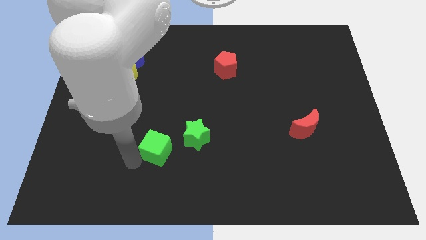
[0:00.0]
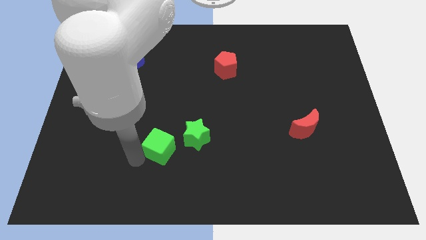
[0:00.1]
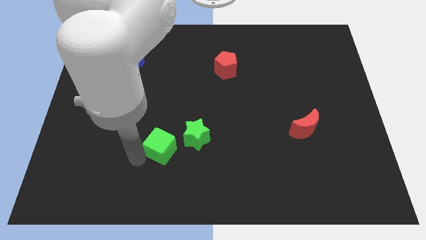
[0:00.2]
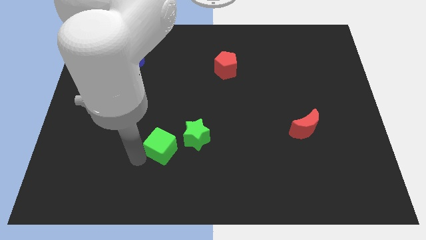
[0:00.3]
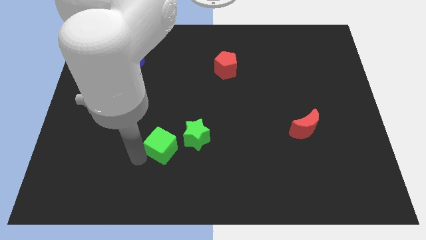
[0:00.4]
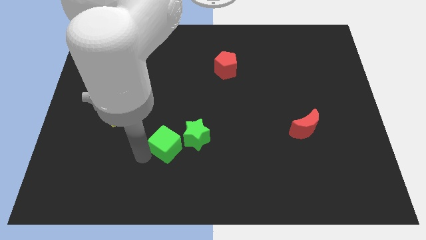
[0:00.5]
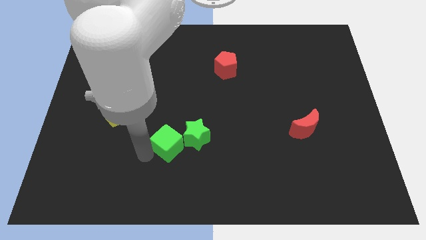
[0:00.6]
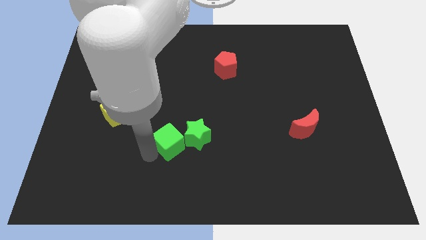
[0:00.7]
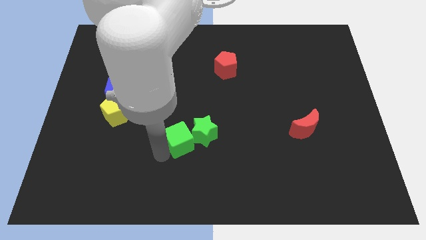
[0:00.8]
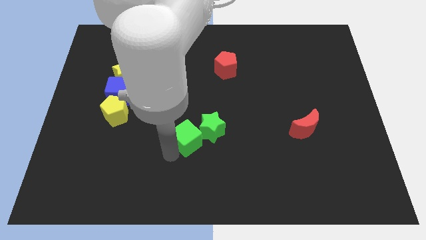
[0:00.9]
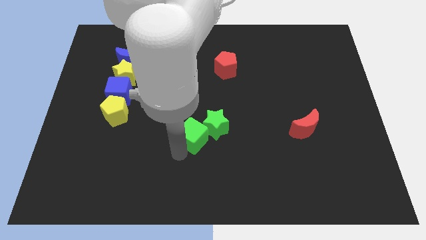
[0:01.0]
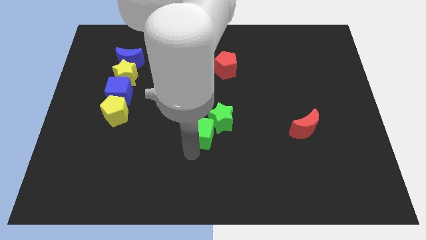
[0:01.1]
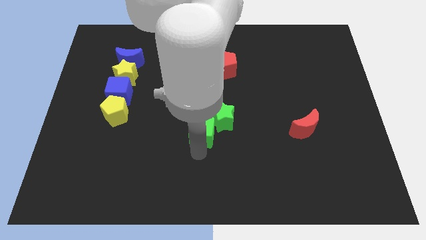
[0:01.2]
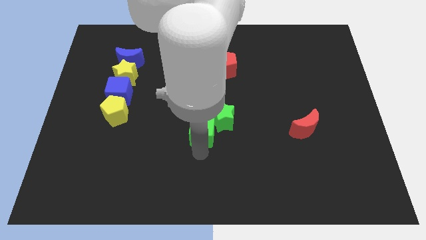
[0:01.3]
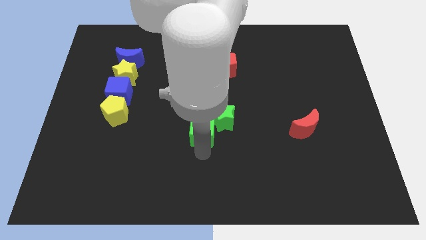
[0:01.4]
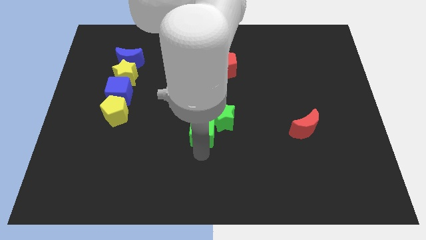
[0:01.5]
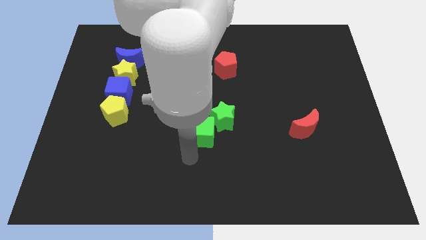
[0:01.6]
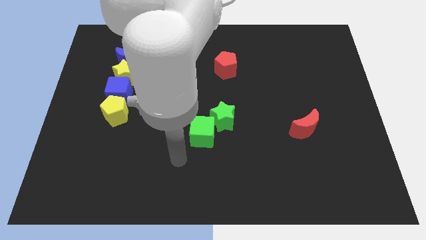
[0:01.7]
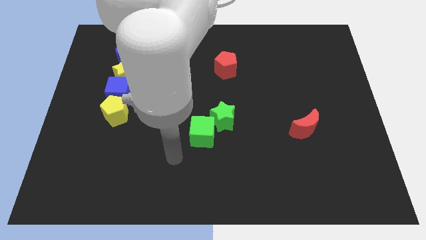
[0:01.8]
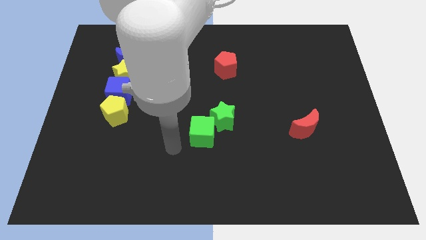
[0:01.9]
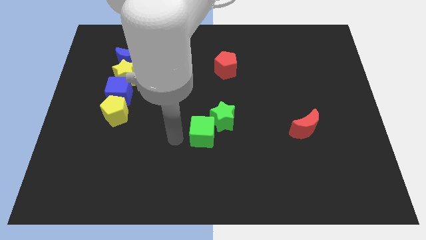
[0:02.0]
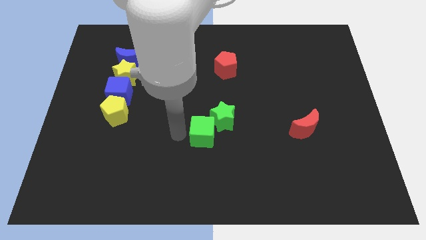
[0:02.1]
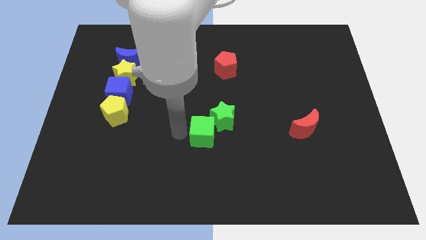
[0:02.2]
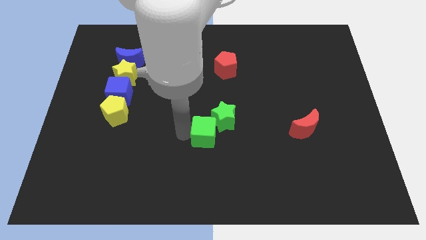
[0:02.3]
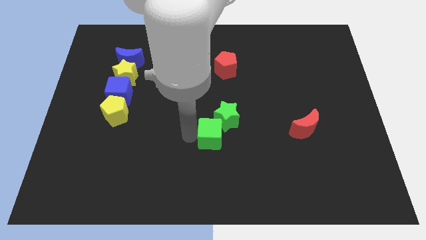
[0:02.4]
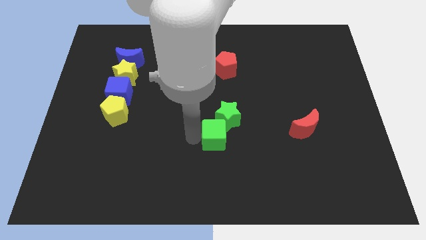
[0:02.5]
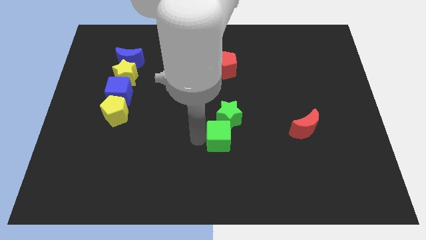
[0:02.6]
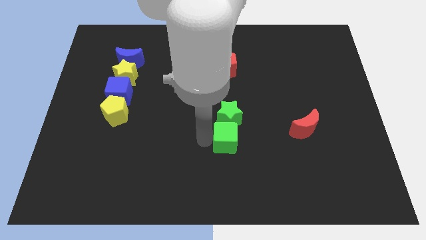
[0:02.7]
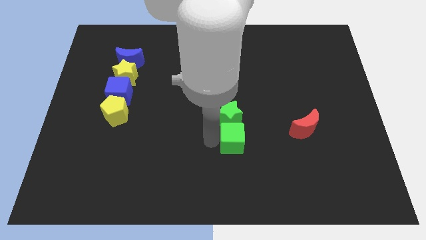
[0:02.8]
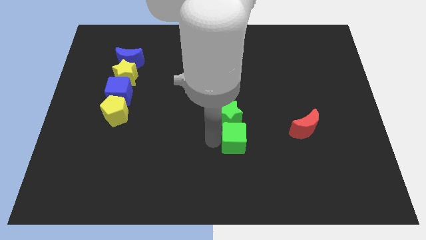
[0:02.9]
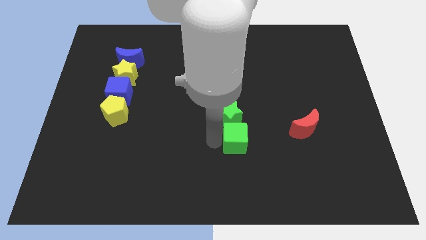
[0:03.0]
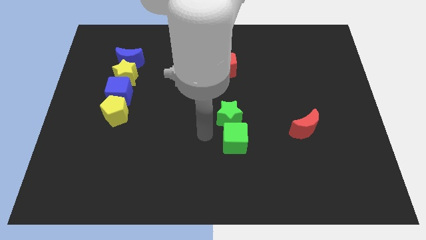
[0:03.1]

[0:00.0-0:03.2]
push the green cube below green star

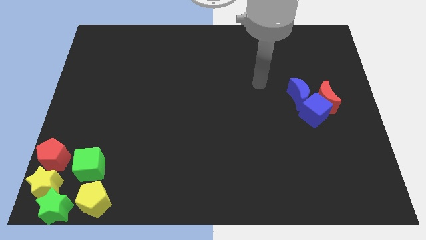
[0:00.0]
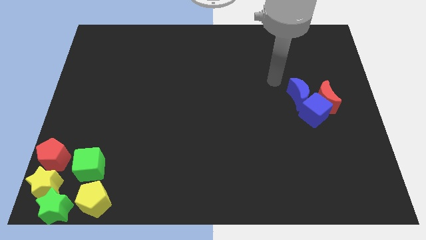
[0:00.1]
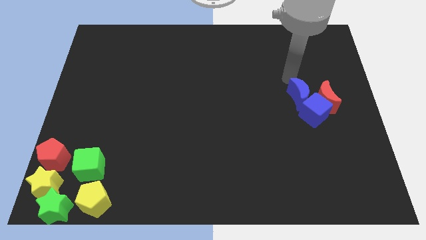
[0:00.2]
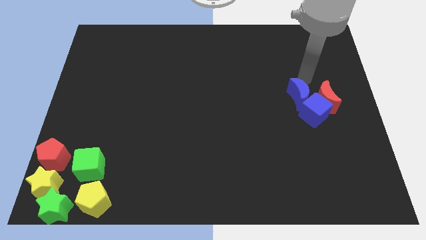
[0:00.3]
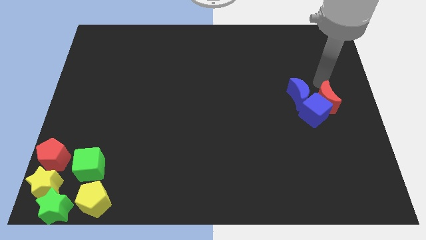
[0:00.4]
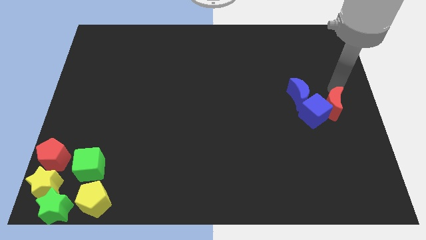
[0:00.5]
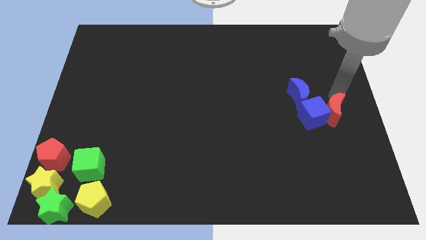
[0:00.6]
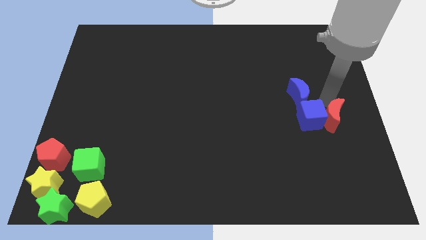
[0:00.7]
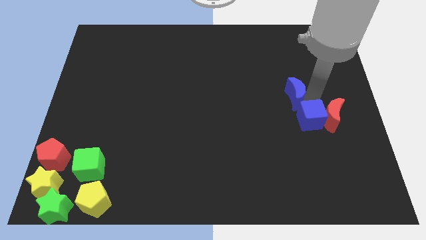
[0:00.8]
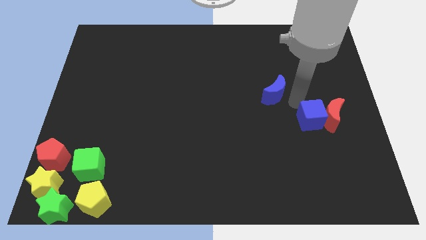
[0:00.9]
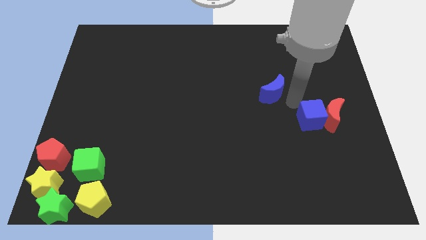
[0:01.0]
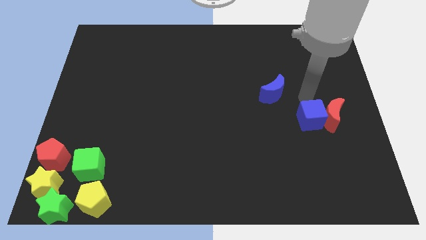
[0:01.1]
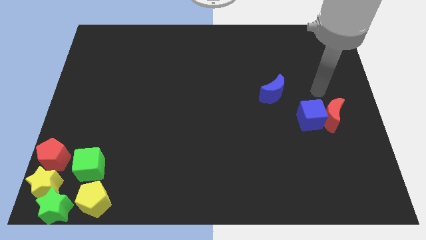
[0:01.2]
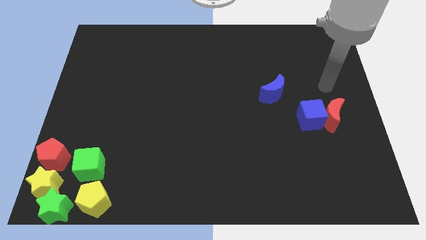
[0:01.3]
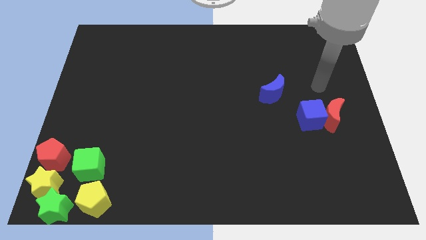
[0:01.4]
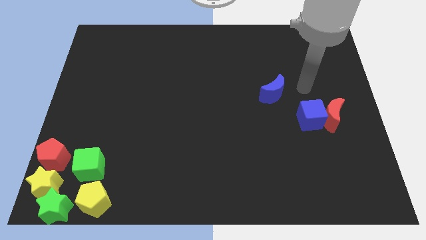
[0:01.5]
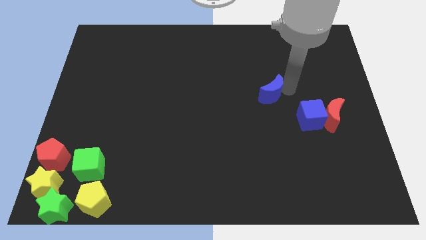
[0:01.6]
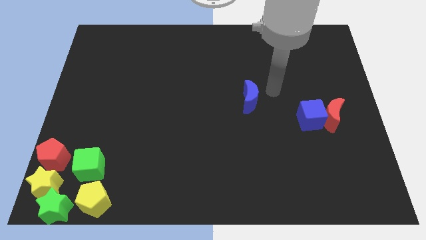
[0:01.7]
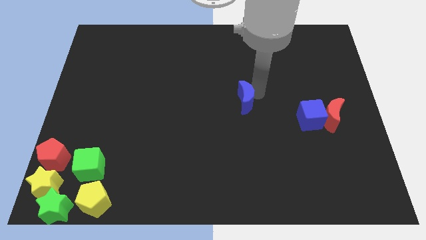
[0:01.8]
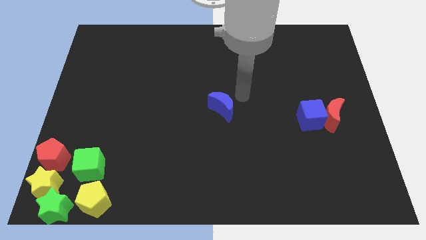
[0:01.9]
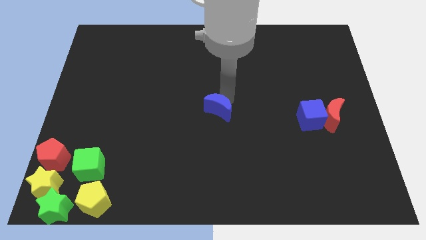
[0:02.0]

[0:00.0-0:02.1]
push the red moon and separate the blue moon to the center

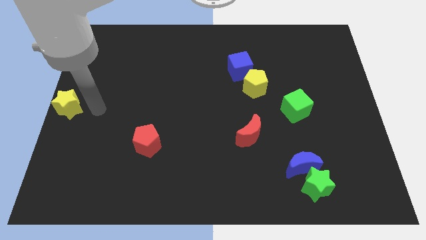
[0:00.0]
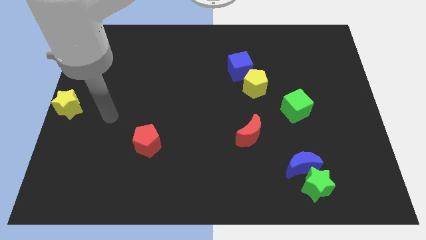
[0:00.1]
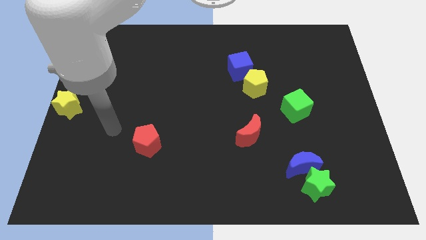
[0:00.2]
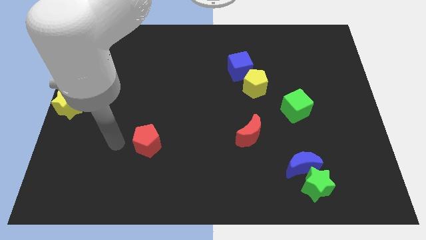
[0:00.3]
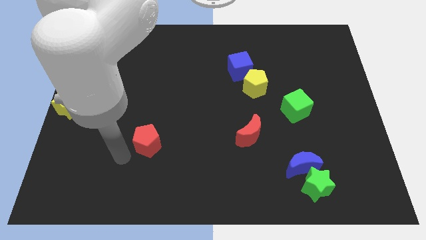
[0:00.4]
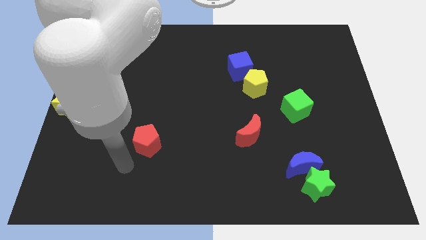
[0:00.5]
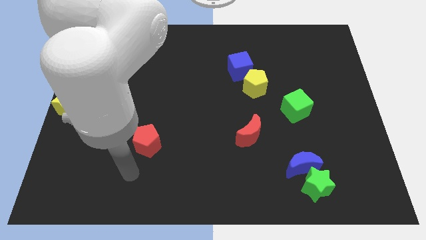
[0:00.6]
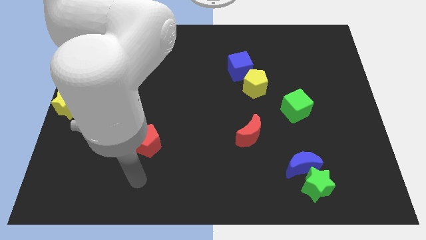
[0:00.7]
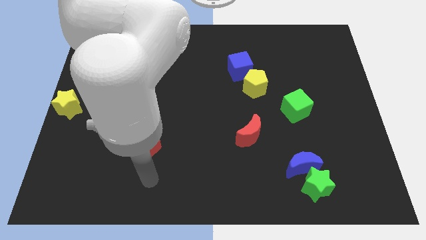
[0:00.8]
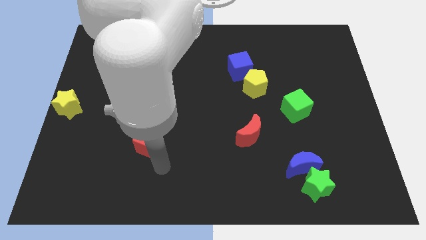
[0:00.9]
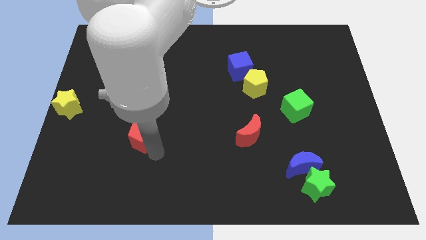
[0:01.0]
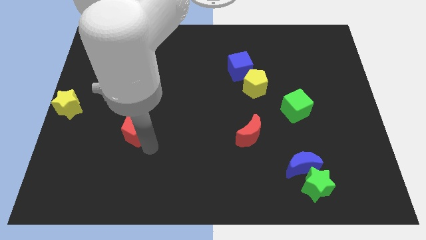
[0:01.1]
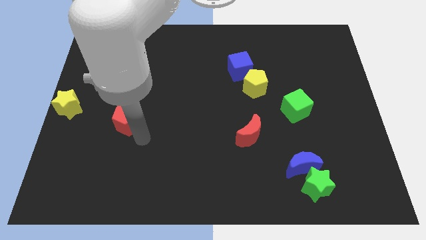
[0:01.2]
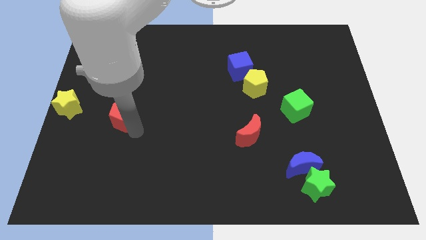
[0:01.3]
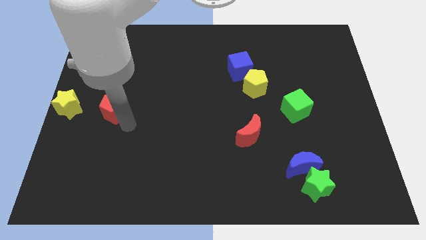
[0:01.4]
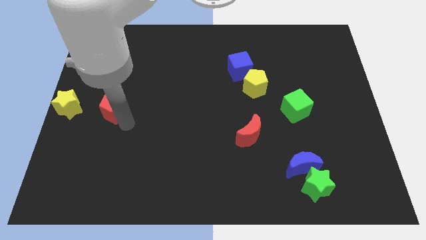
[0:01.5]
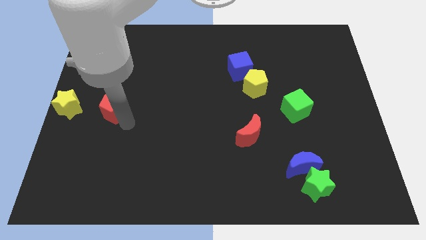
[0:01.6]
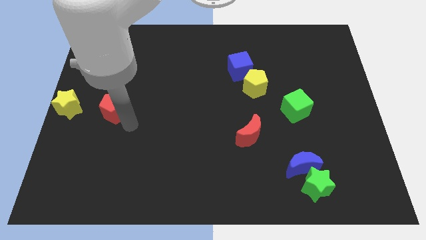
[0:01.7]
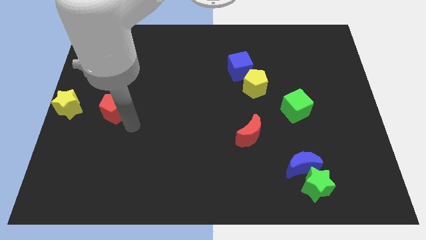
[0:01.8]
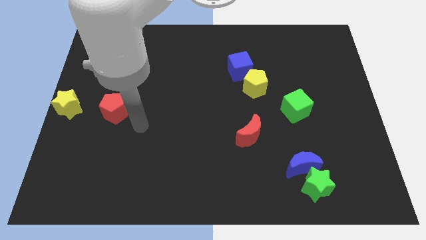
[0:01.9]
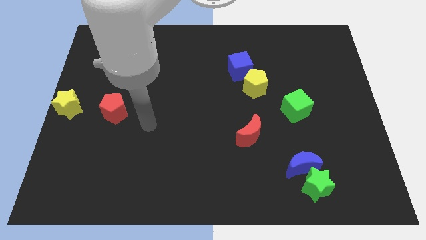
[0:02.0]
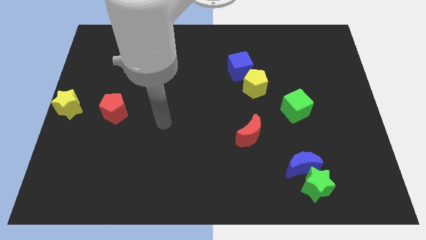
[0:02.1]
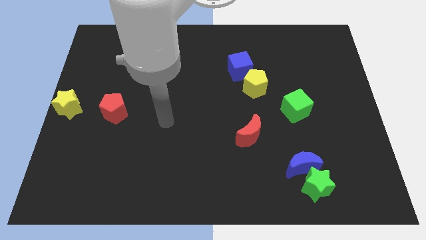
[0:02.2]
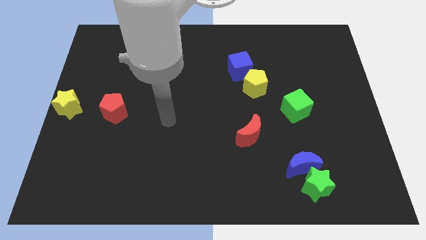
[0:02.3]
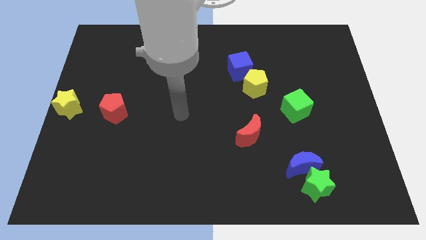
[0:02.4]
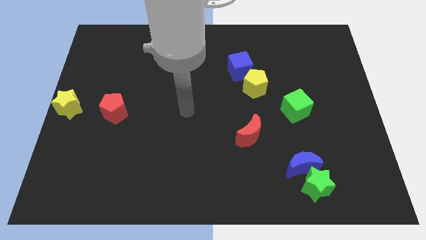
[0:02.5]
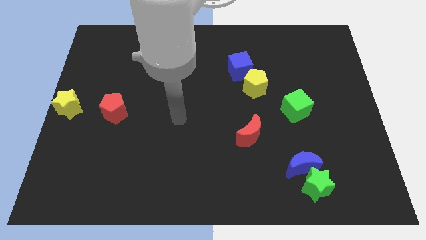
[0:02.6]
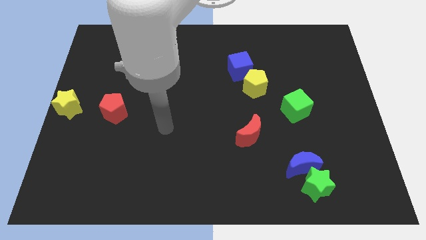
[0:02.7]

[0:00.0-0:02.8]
push the red pentagon parallel right to the yellow star

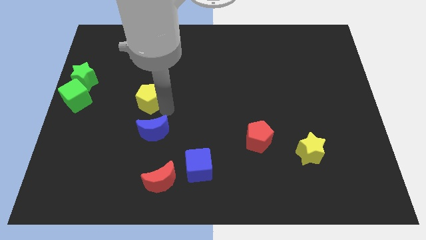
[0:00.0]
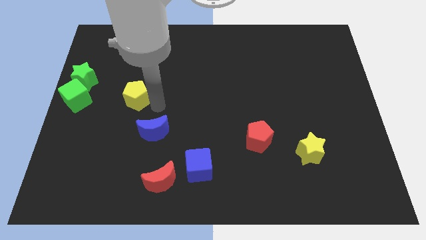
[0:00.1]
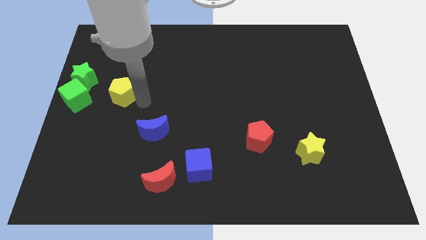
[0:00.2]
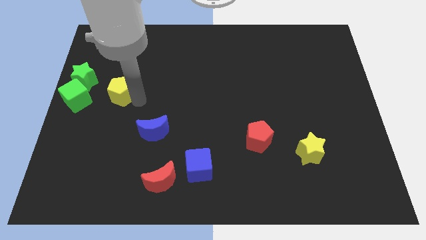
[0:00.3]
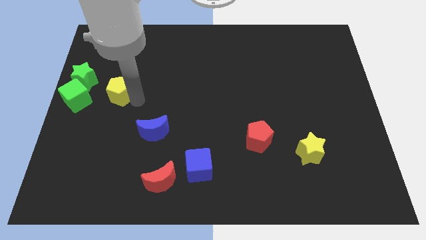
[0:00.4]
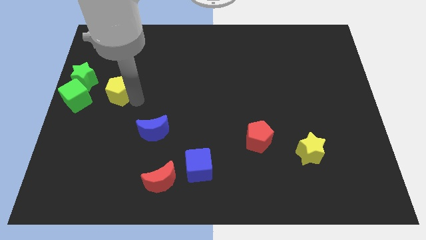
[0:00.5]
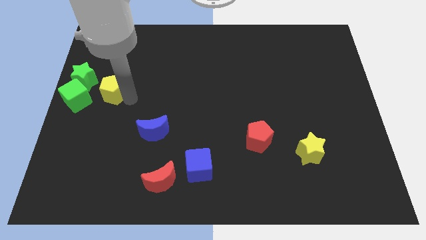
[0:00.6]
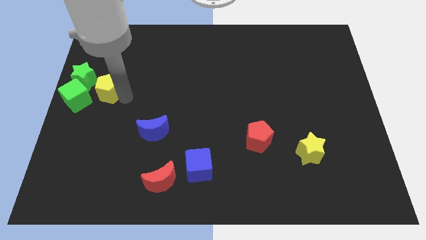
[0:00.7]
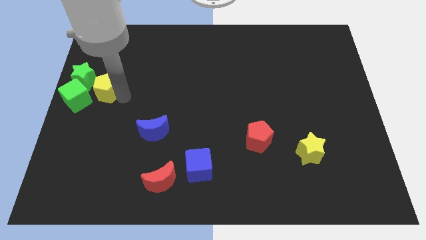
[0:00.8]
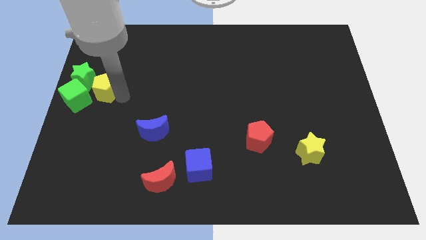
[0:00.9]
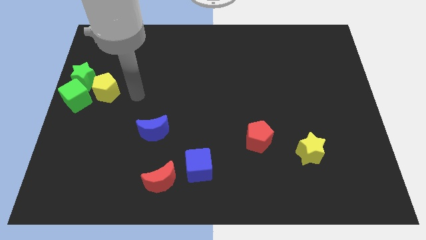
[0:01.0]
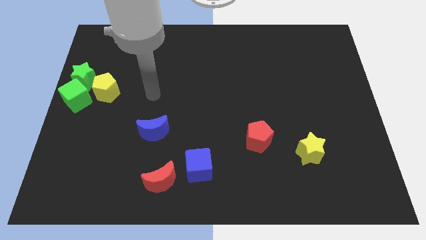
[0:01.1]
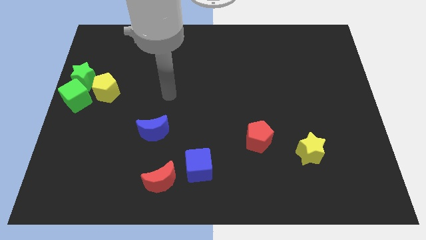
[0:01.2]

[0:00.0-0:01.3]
move the yellow pentagon diagonally top left to the blue moon
